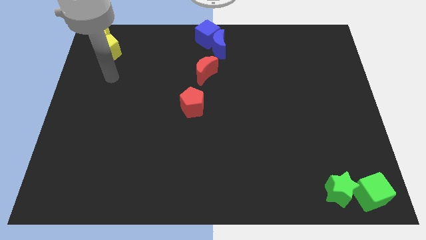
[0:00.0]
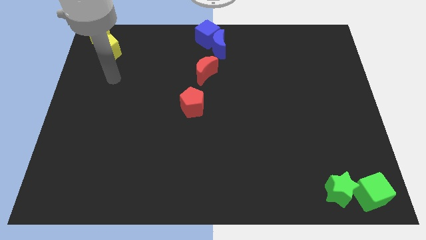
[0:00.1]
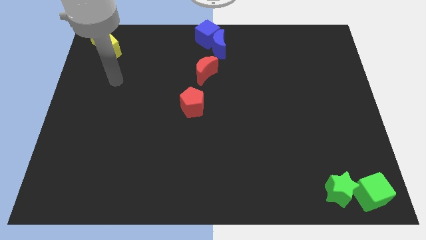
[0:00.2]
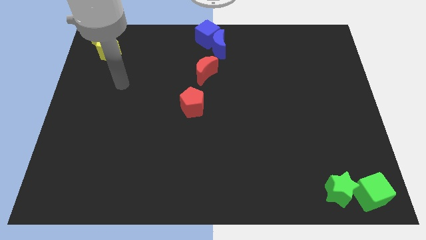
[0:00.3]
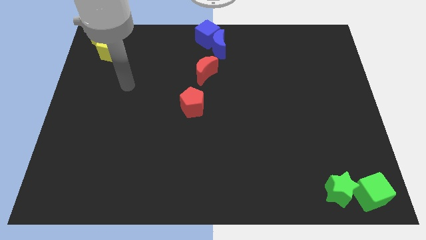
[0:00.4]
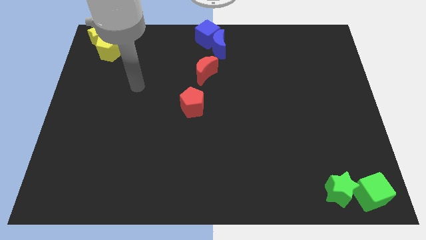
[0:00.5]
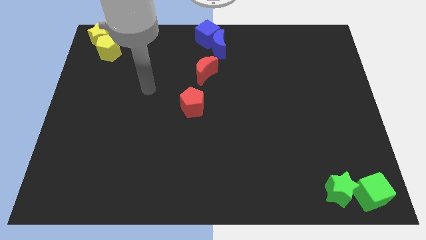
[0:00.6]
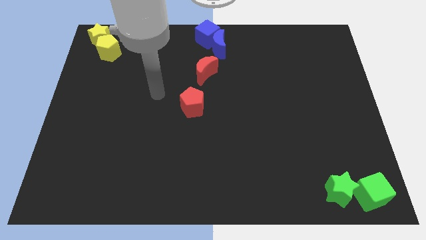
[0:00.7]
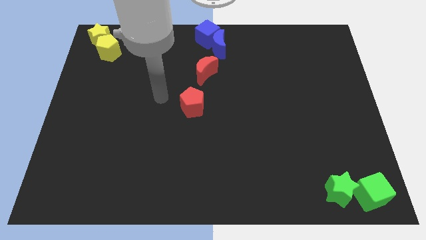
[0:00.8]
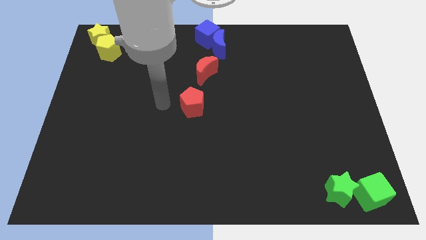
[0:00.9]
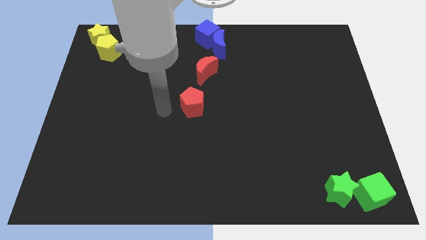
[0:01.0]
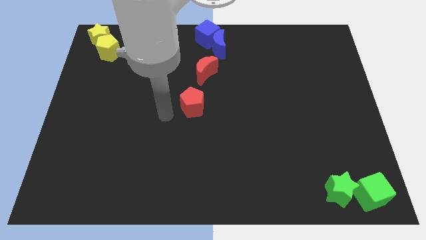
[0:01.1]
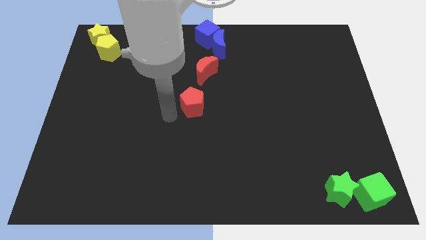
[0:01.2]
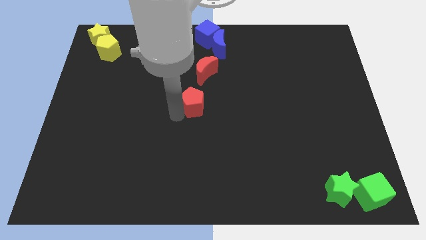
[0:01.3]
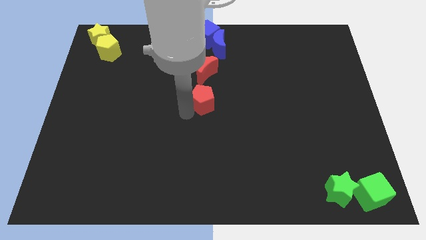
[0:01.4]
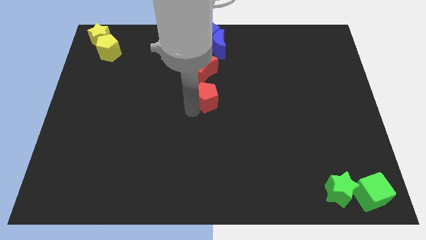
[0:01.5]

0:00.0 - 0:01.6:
move your arm towards the red pentagon

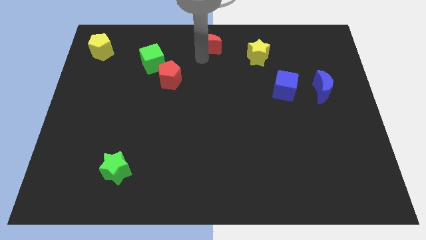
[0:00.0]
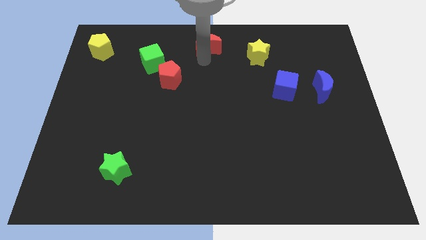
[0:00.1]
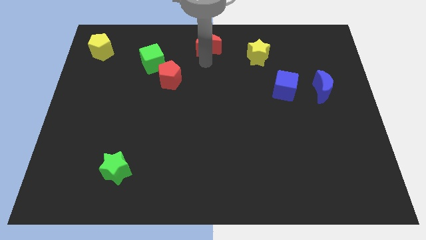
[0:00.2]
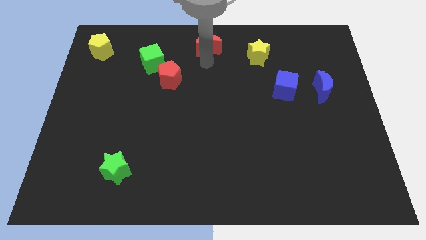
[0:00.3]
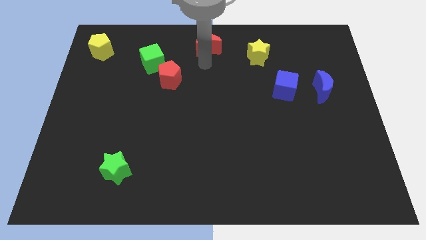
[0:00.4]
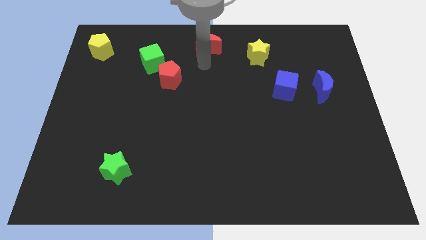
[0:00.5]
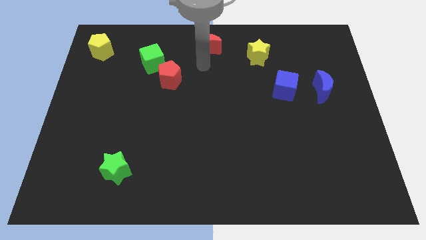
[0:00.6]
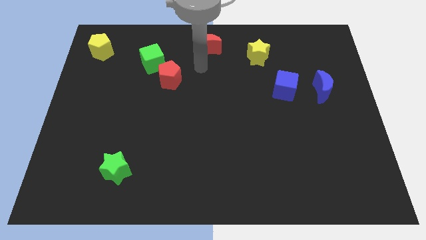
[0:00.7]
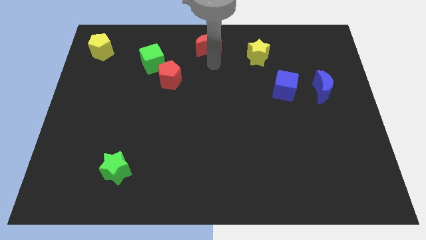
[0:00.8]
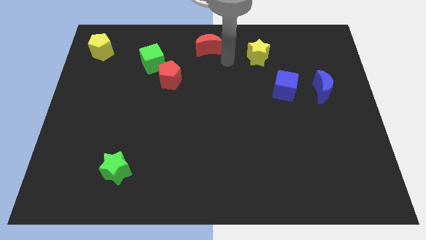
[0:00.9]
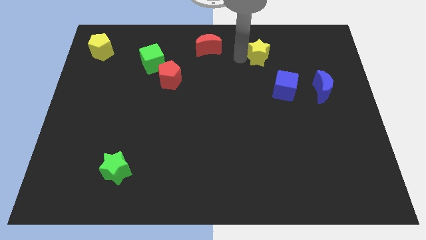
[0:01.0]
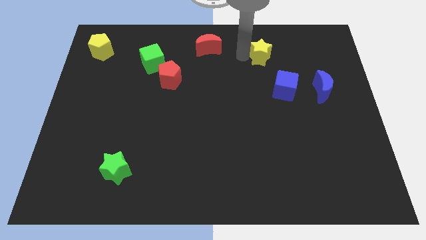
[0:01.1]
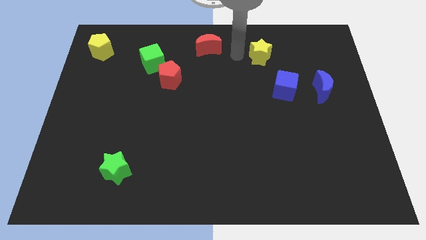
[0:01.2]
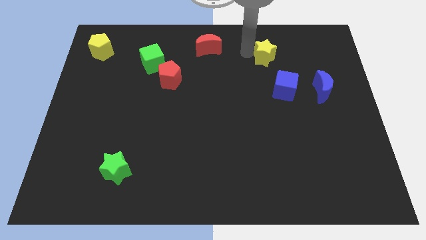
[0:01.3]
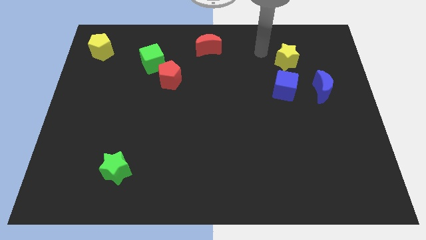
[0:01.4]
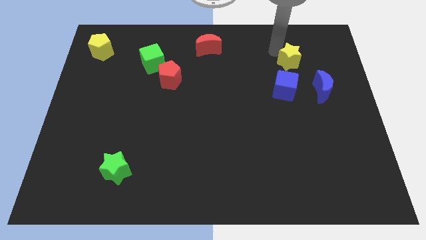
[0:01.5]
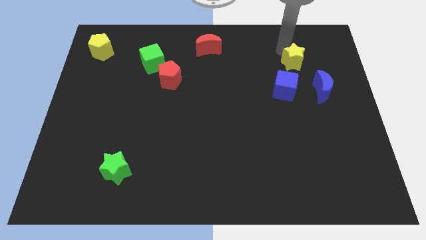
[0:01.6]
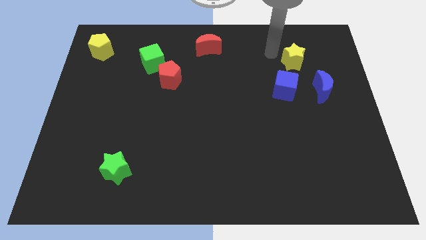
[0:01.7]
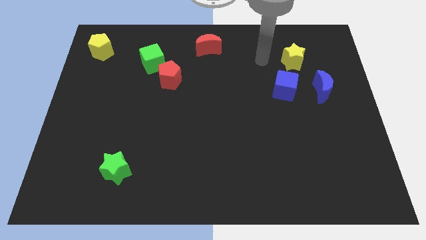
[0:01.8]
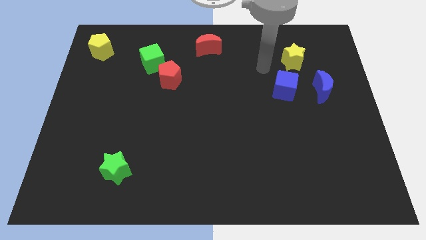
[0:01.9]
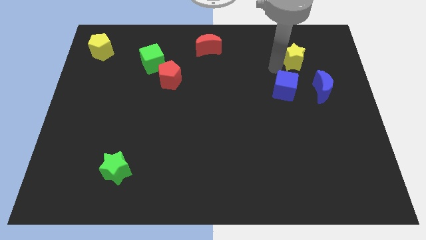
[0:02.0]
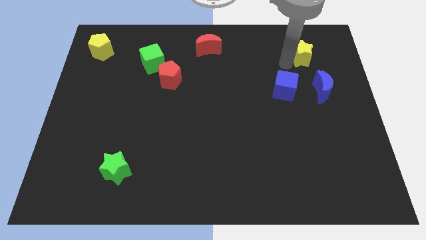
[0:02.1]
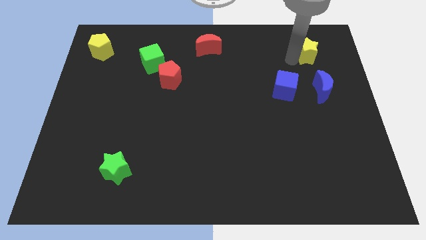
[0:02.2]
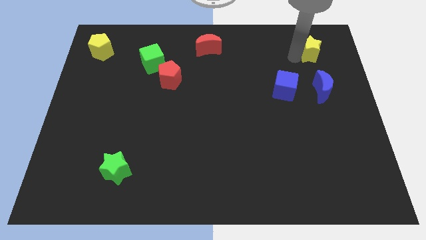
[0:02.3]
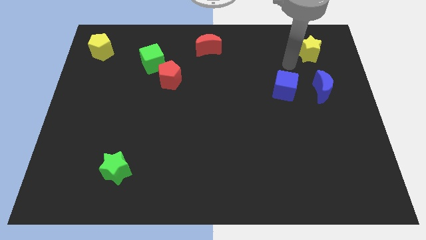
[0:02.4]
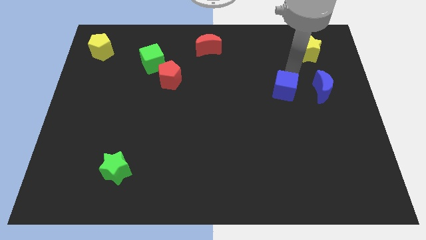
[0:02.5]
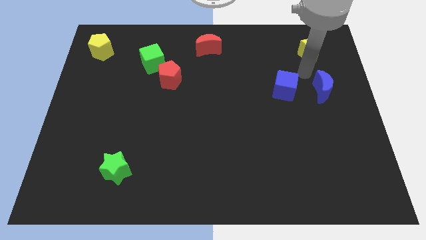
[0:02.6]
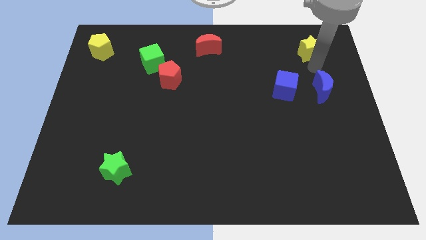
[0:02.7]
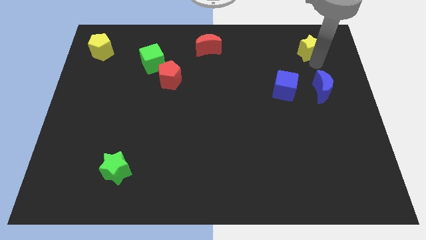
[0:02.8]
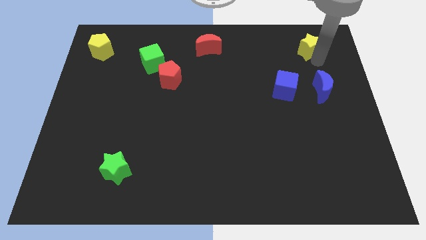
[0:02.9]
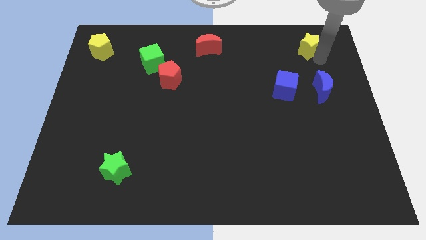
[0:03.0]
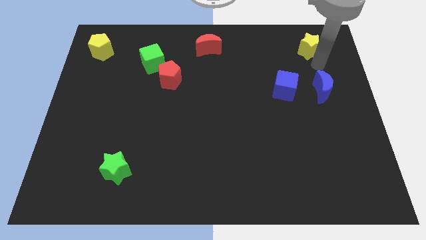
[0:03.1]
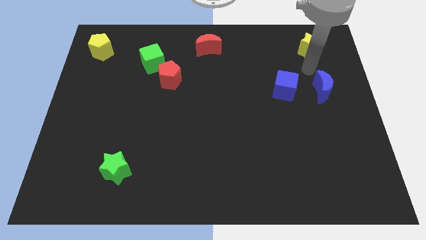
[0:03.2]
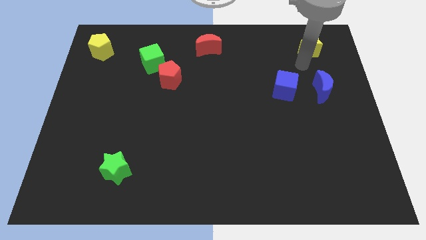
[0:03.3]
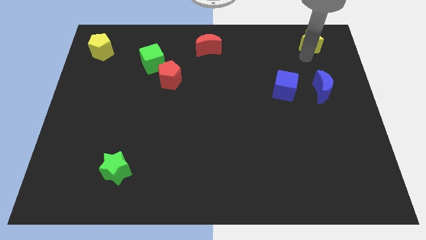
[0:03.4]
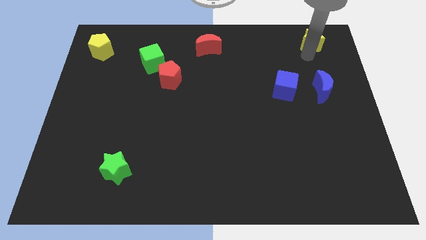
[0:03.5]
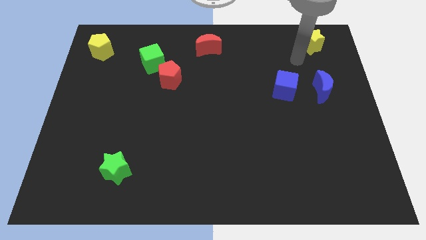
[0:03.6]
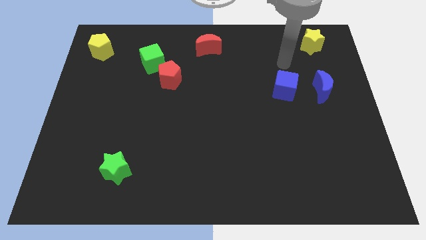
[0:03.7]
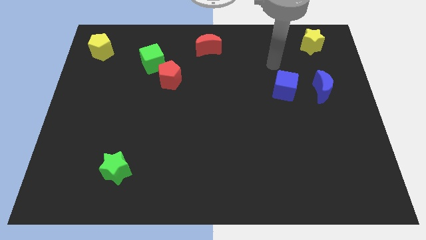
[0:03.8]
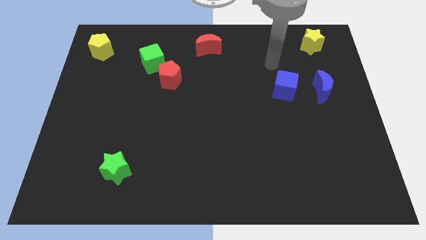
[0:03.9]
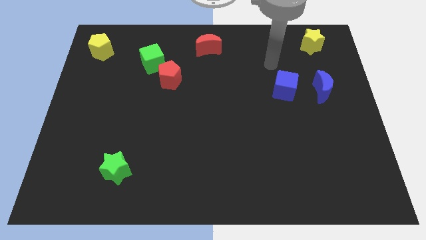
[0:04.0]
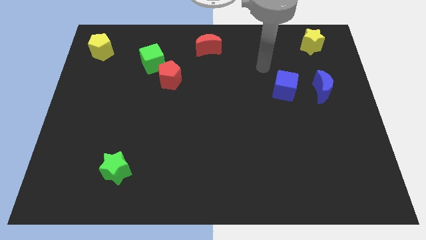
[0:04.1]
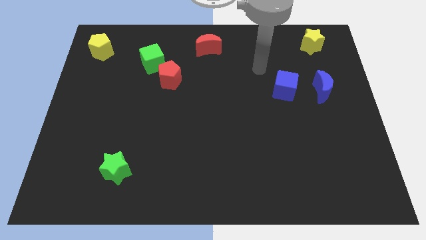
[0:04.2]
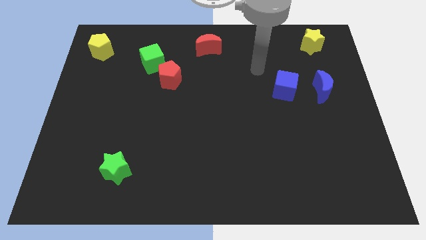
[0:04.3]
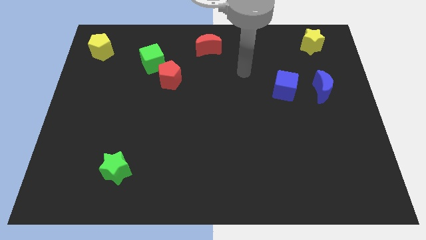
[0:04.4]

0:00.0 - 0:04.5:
move the yellow star to the top right

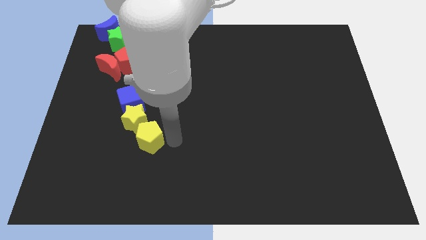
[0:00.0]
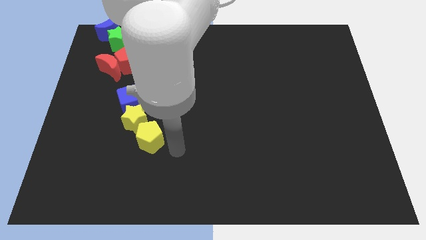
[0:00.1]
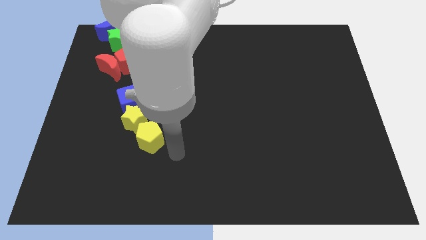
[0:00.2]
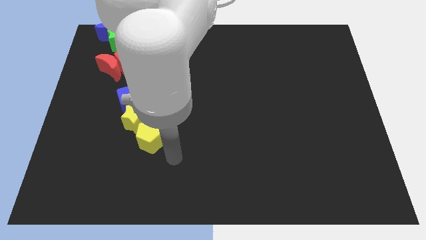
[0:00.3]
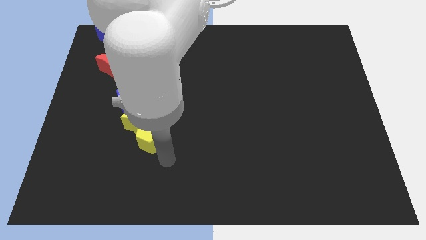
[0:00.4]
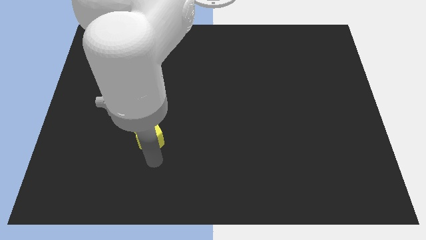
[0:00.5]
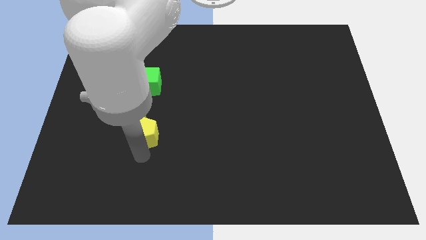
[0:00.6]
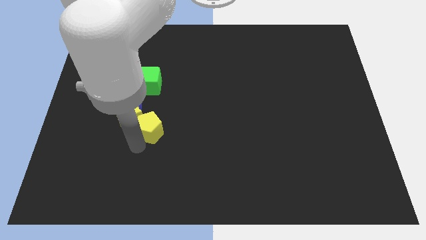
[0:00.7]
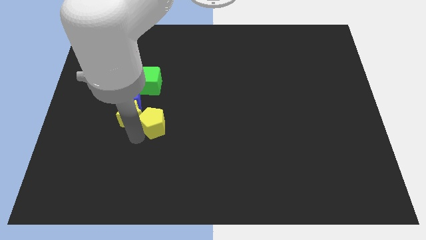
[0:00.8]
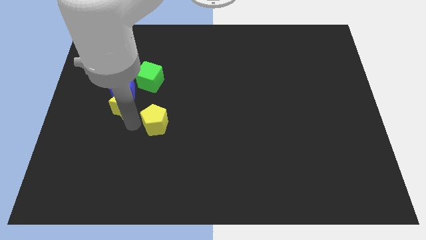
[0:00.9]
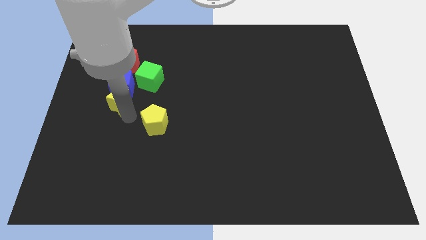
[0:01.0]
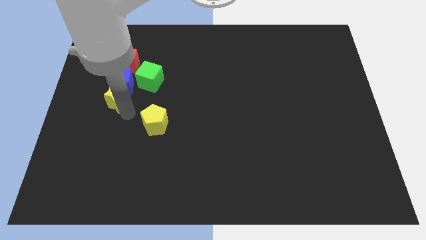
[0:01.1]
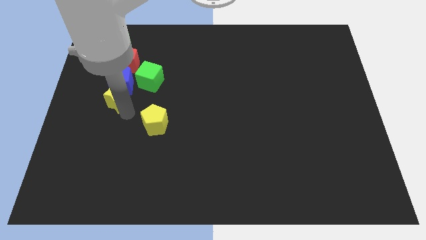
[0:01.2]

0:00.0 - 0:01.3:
separate the yellow pentagon and the yellow star

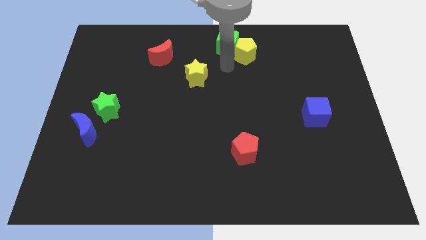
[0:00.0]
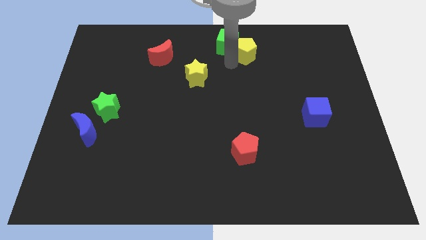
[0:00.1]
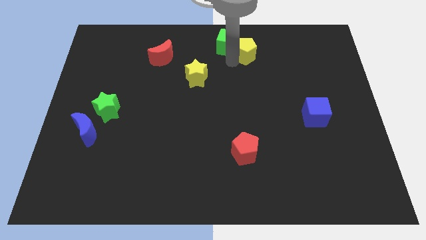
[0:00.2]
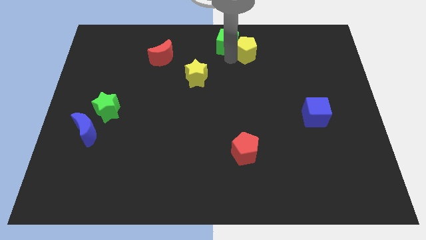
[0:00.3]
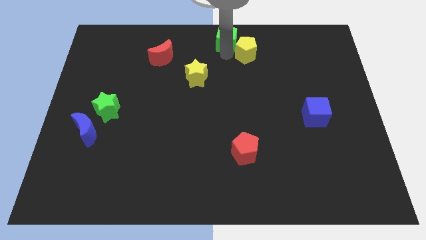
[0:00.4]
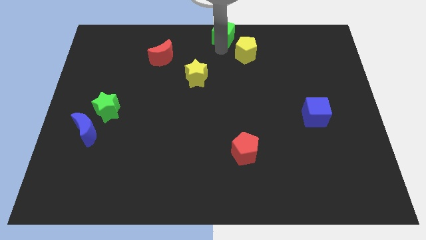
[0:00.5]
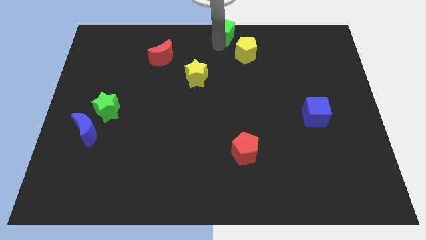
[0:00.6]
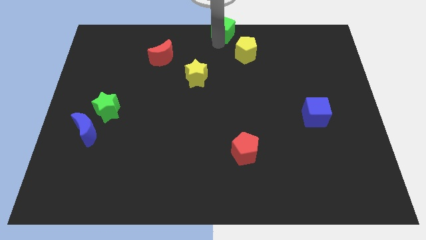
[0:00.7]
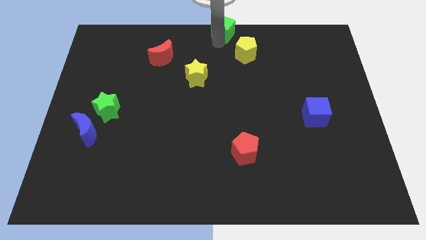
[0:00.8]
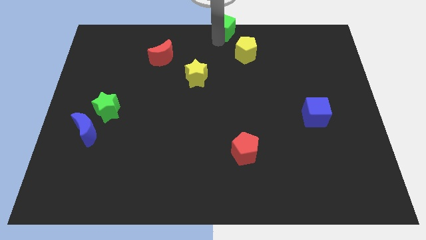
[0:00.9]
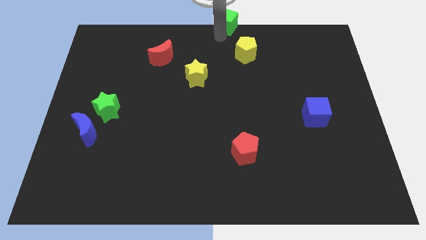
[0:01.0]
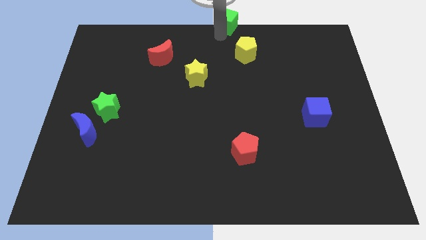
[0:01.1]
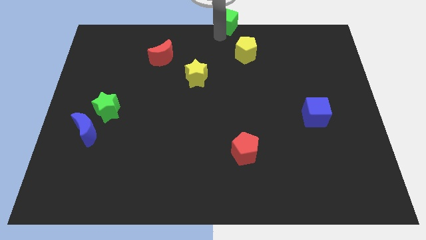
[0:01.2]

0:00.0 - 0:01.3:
push the green cube towards the top center of the board

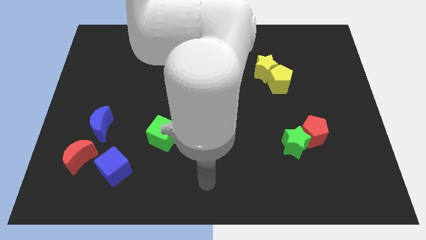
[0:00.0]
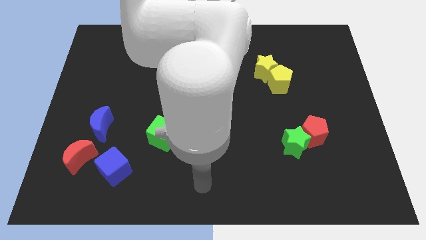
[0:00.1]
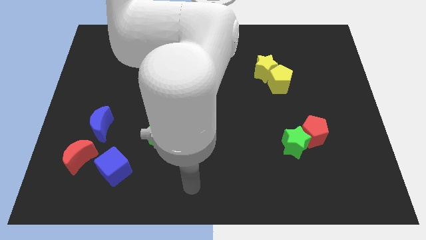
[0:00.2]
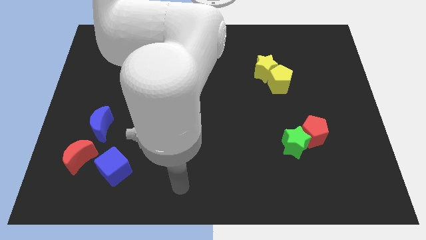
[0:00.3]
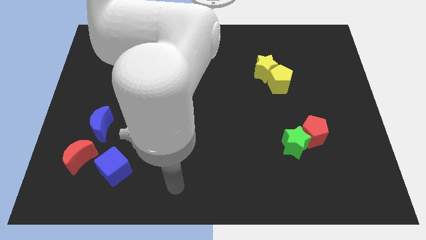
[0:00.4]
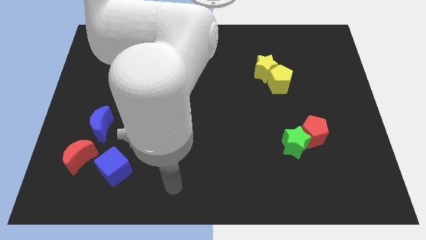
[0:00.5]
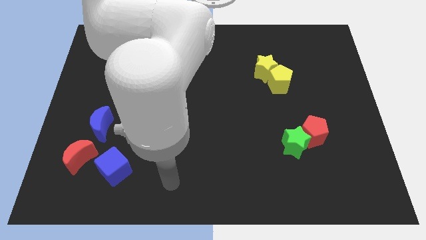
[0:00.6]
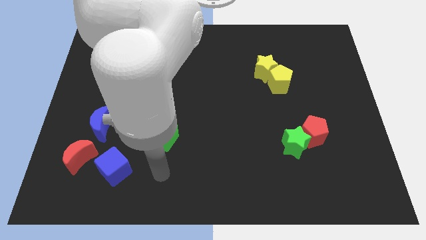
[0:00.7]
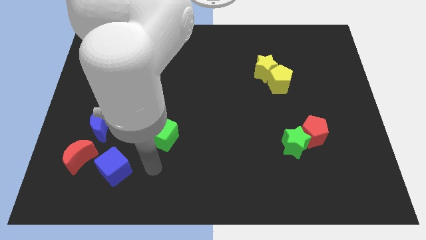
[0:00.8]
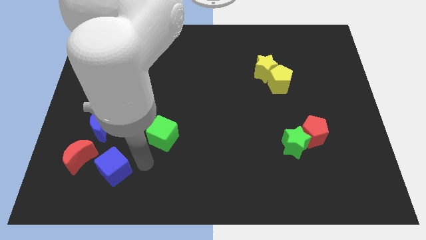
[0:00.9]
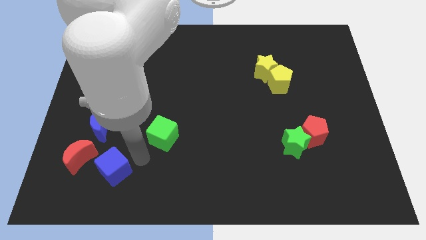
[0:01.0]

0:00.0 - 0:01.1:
place arm in between green cube and blue cube
